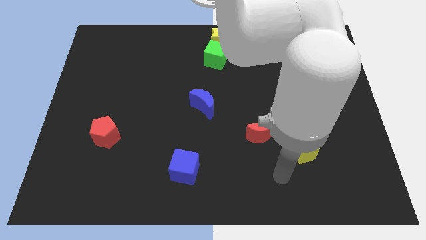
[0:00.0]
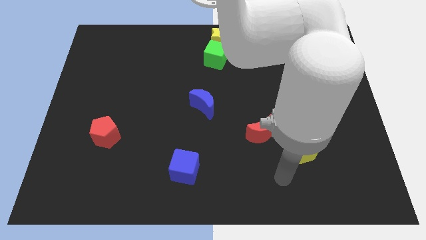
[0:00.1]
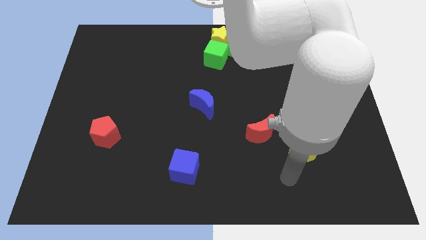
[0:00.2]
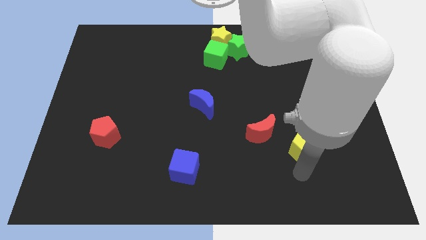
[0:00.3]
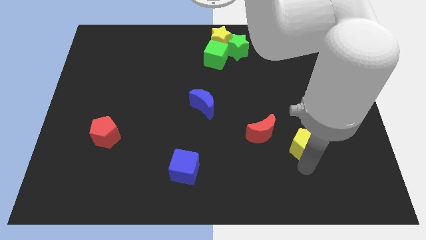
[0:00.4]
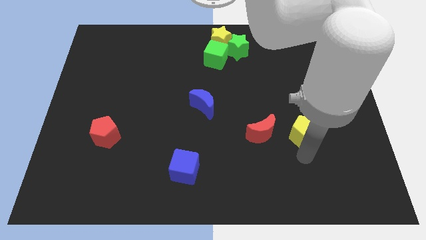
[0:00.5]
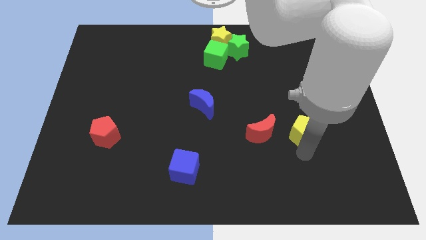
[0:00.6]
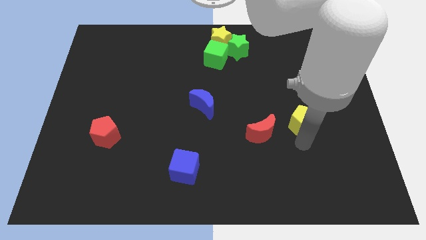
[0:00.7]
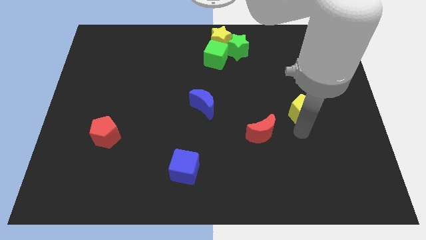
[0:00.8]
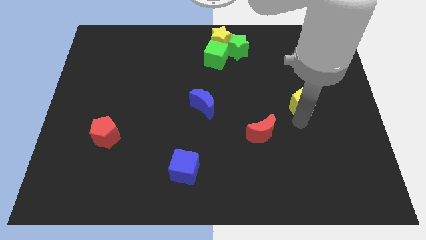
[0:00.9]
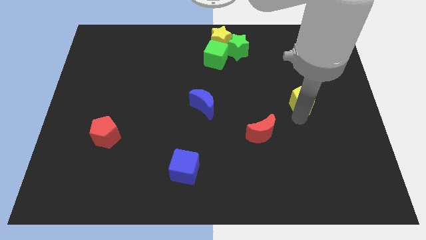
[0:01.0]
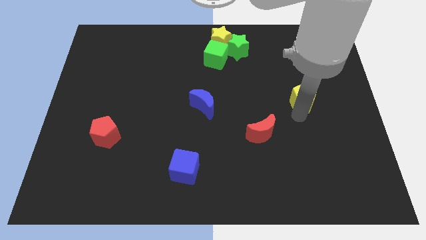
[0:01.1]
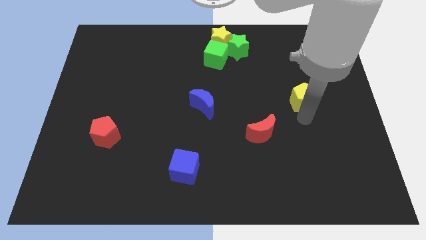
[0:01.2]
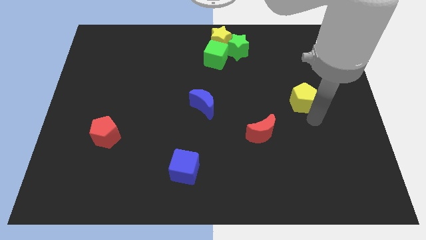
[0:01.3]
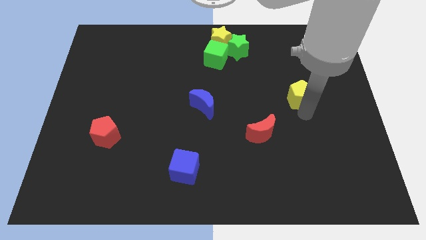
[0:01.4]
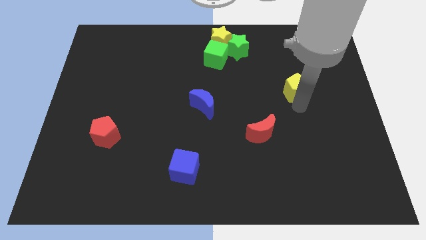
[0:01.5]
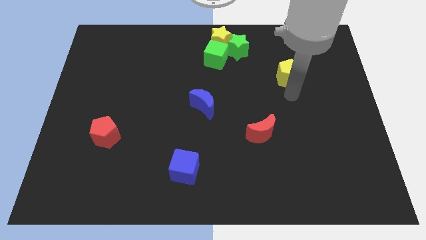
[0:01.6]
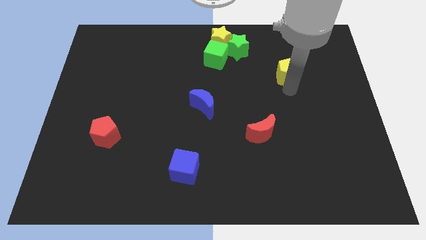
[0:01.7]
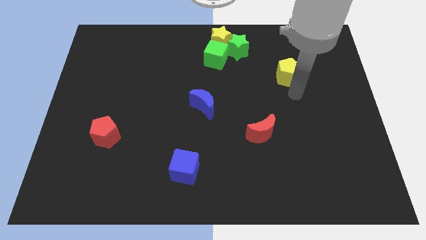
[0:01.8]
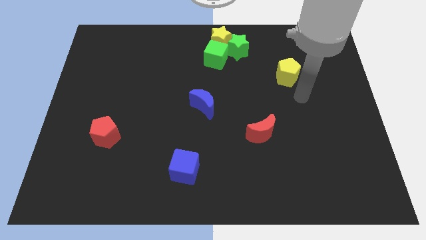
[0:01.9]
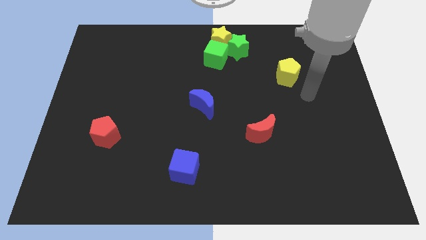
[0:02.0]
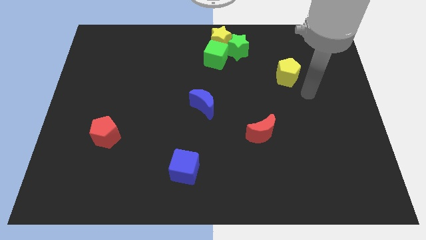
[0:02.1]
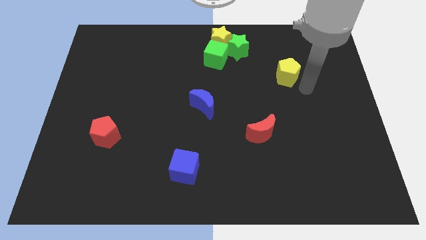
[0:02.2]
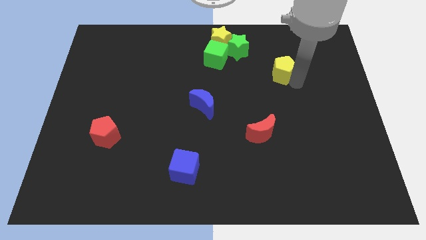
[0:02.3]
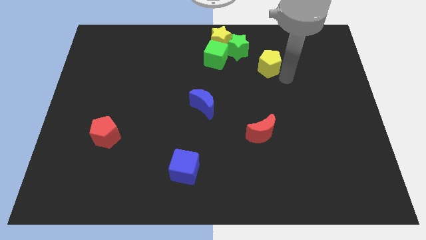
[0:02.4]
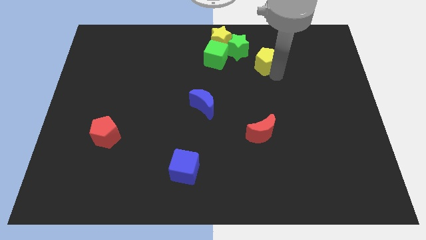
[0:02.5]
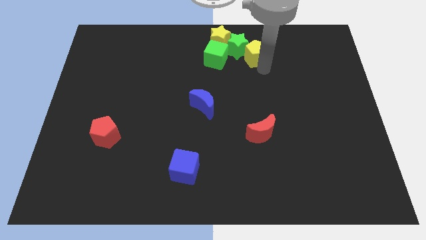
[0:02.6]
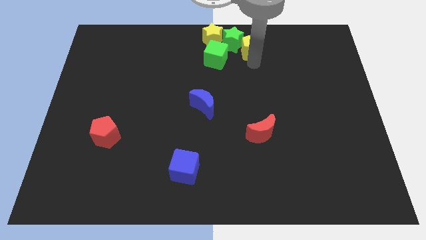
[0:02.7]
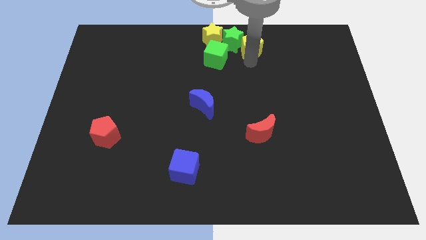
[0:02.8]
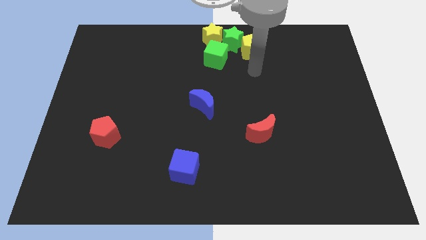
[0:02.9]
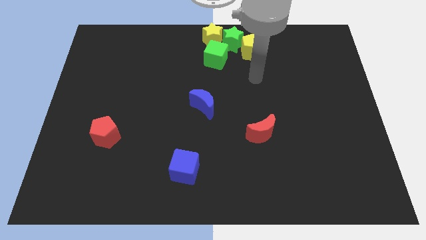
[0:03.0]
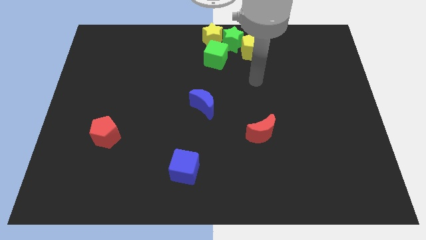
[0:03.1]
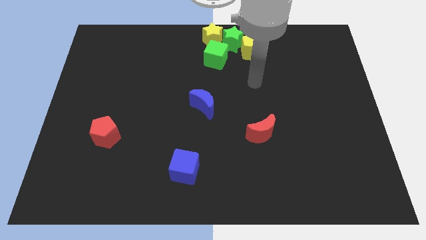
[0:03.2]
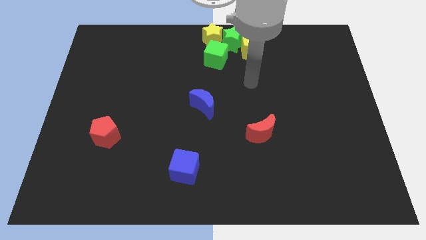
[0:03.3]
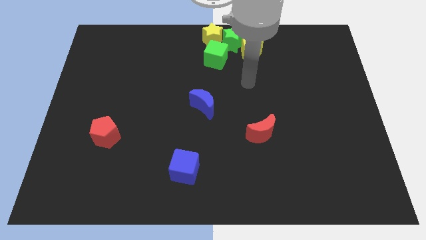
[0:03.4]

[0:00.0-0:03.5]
move the yellow pentagon right to the green star

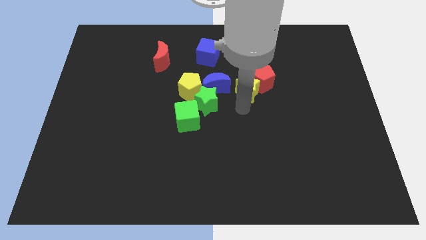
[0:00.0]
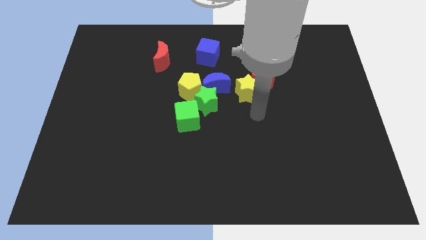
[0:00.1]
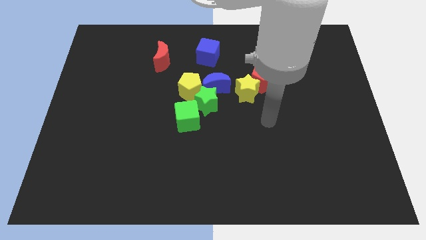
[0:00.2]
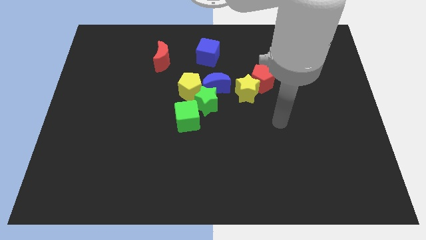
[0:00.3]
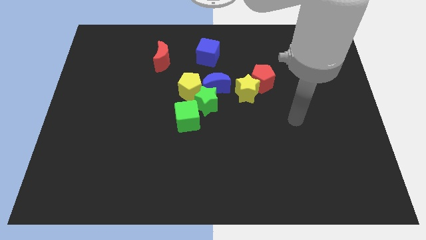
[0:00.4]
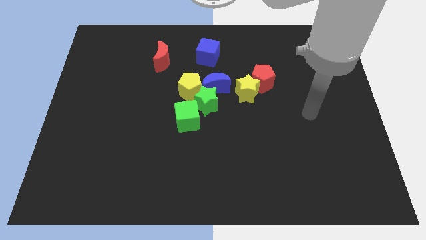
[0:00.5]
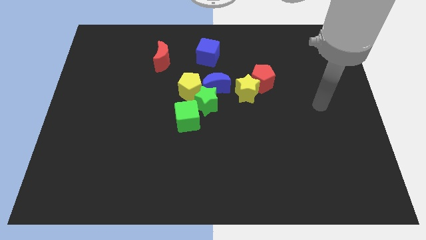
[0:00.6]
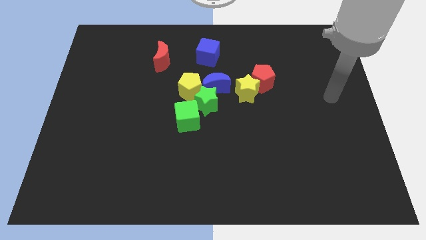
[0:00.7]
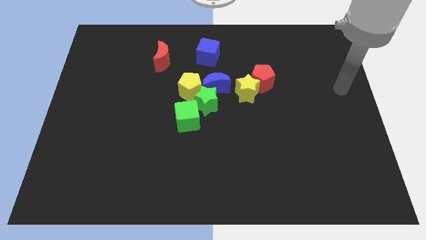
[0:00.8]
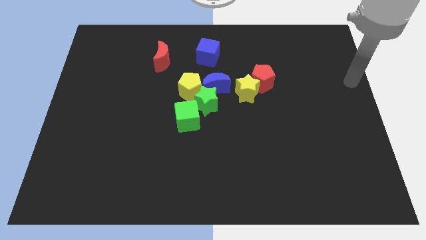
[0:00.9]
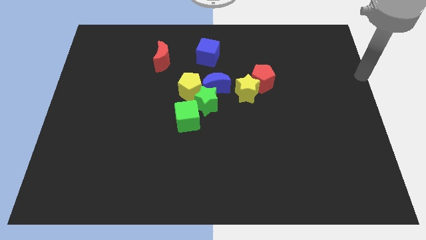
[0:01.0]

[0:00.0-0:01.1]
go away from the group of blocks

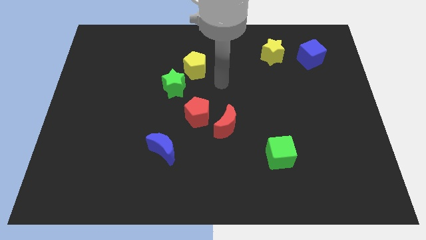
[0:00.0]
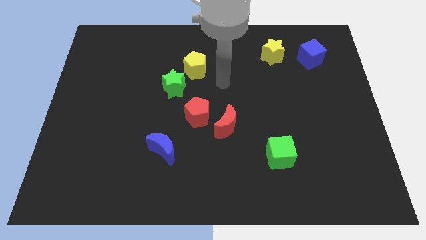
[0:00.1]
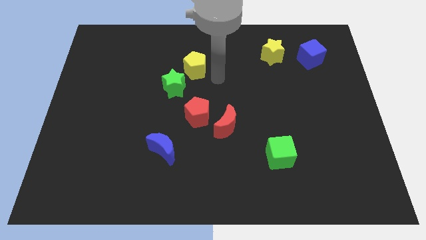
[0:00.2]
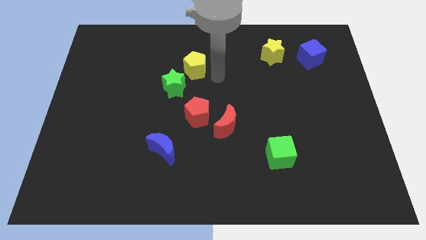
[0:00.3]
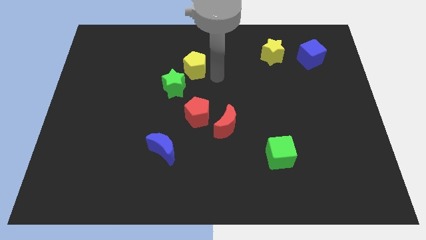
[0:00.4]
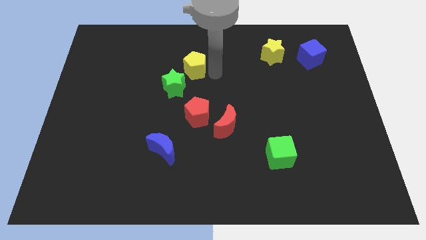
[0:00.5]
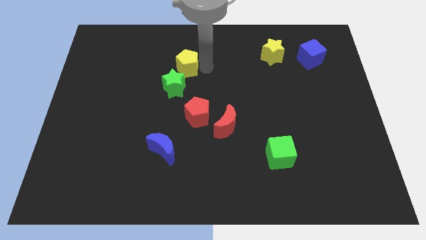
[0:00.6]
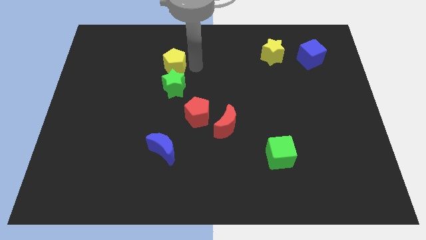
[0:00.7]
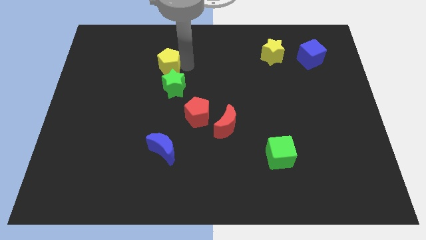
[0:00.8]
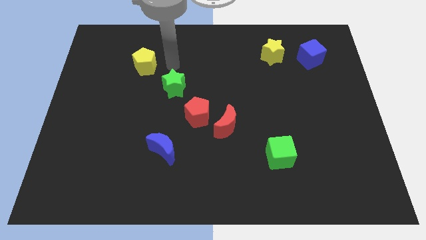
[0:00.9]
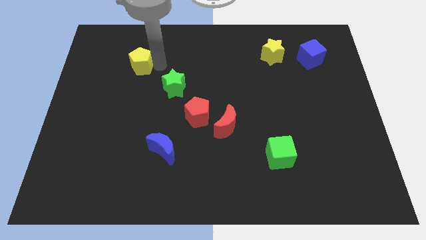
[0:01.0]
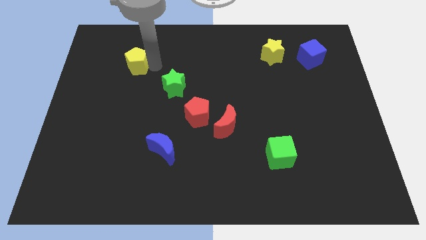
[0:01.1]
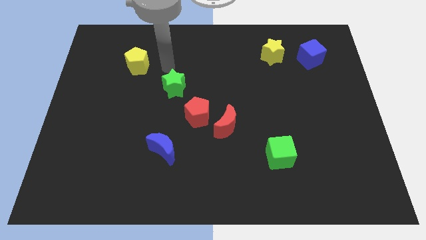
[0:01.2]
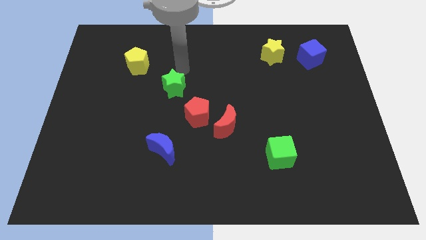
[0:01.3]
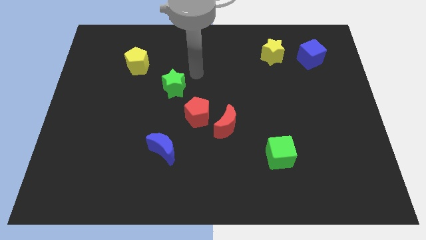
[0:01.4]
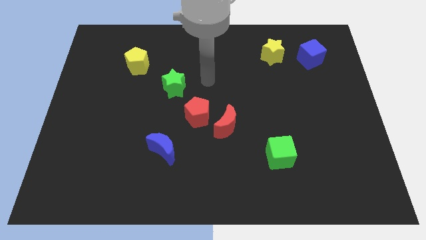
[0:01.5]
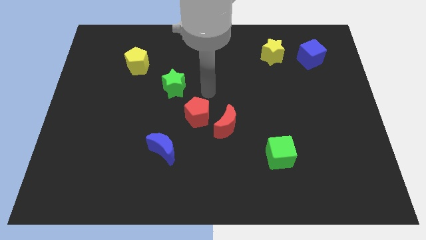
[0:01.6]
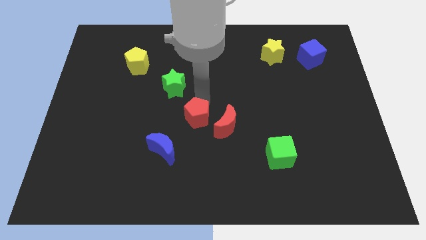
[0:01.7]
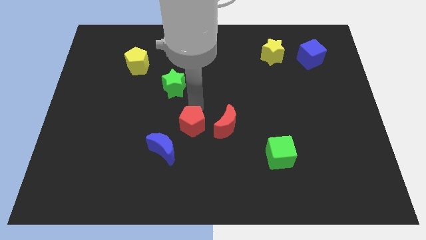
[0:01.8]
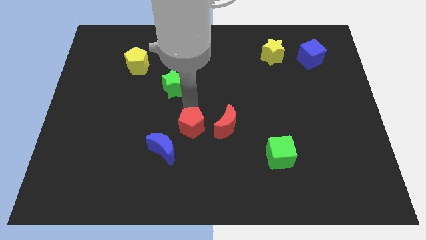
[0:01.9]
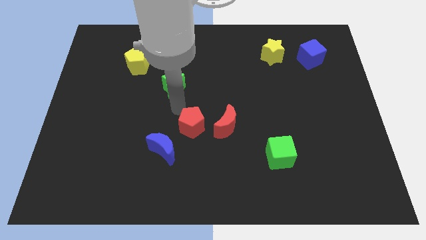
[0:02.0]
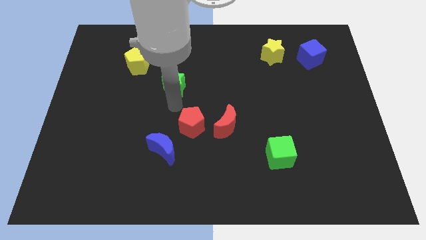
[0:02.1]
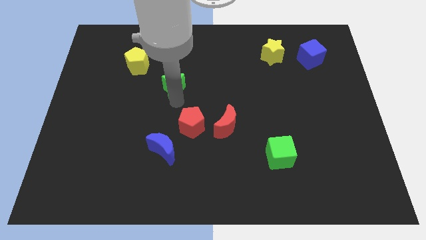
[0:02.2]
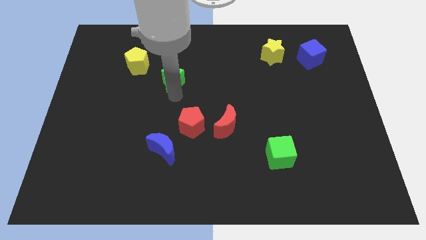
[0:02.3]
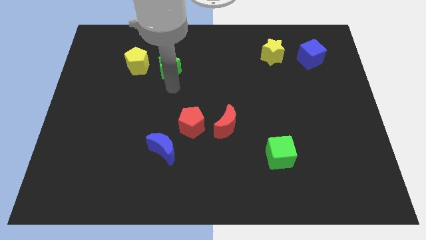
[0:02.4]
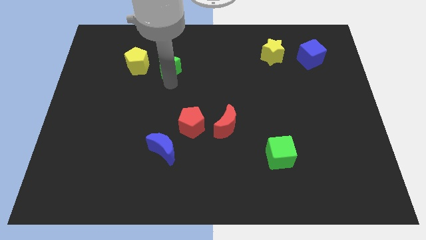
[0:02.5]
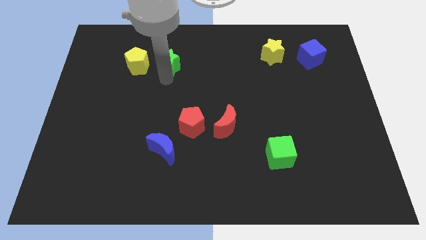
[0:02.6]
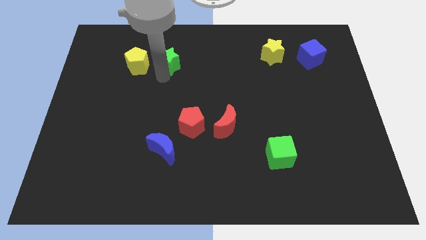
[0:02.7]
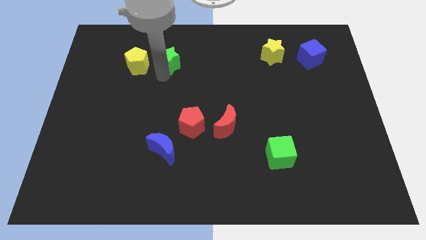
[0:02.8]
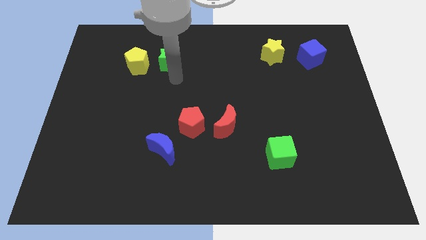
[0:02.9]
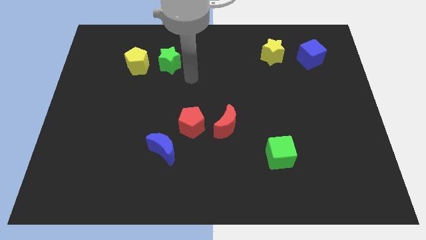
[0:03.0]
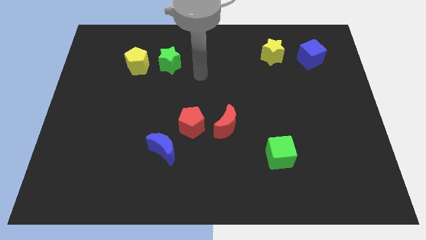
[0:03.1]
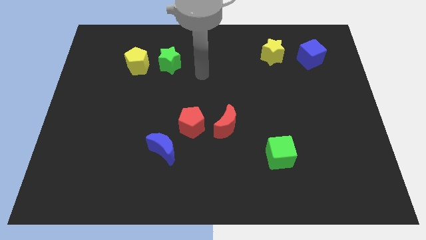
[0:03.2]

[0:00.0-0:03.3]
place the green star to the right of the yellow pentagon

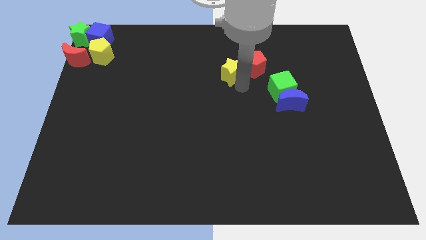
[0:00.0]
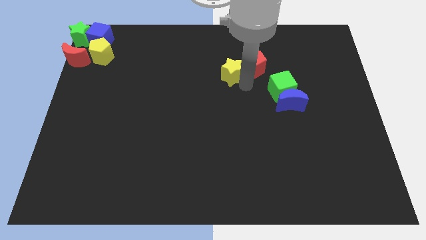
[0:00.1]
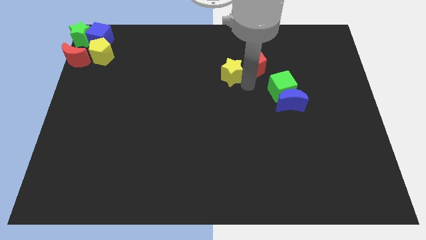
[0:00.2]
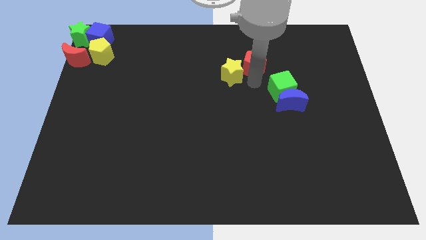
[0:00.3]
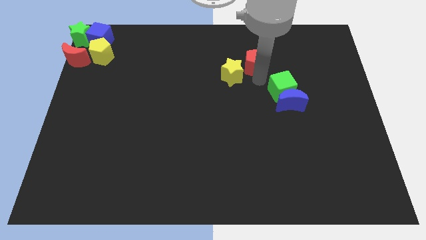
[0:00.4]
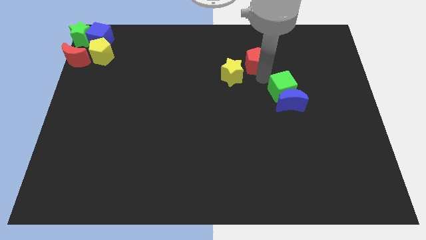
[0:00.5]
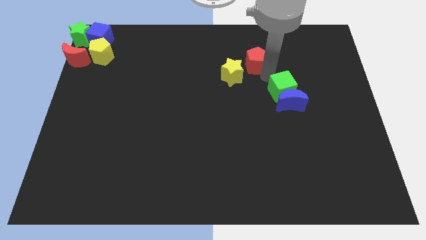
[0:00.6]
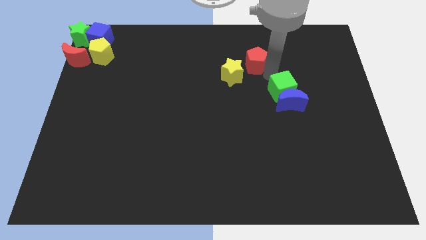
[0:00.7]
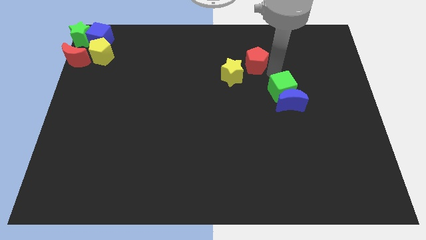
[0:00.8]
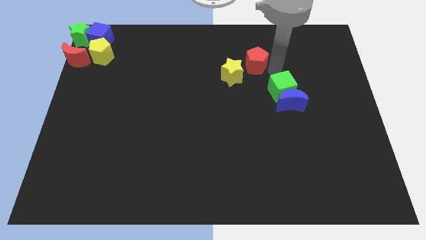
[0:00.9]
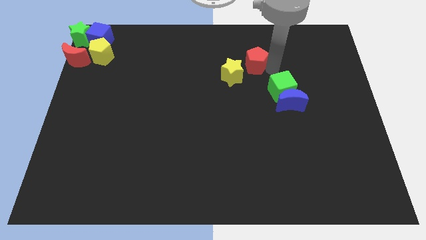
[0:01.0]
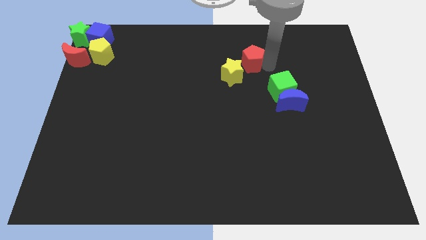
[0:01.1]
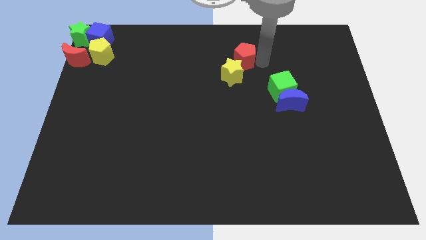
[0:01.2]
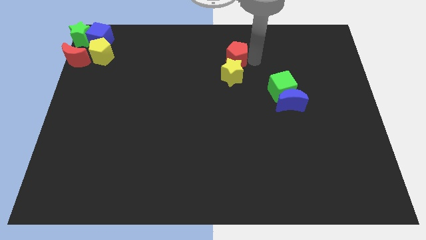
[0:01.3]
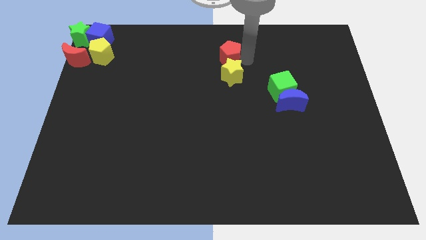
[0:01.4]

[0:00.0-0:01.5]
place the red pentagon above yellow star
